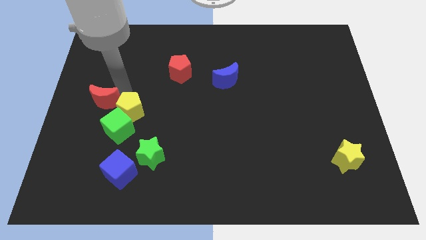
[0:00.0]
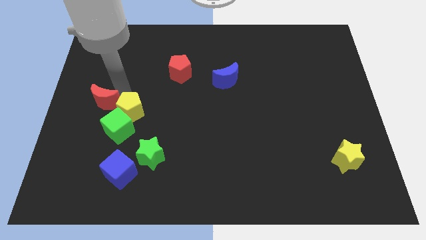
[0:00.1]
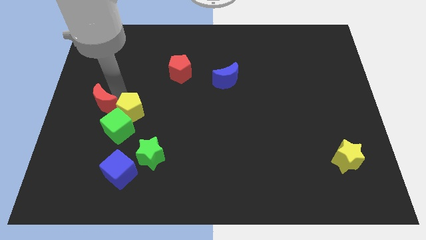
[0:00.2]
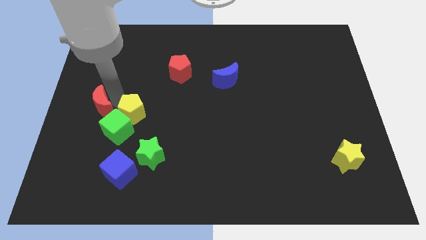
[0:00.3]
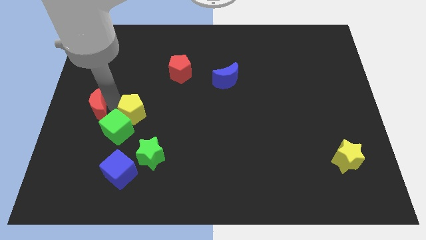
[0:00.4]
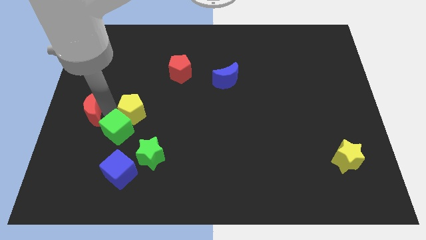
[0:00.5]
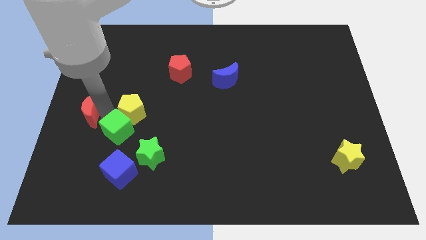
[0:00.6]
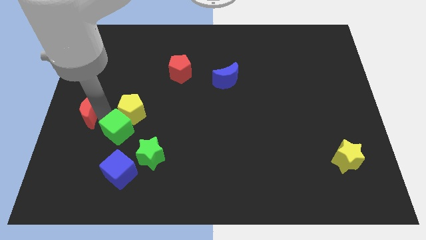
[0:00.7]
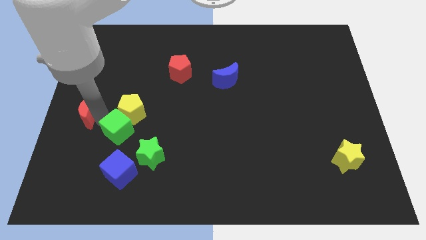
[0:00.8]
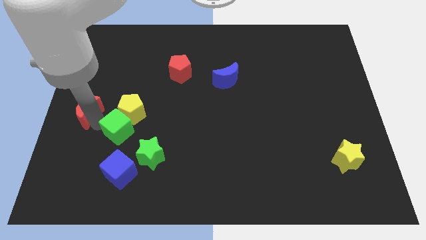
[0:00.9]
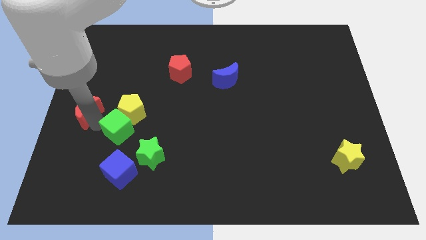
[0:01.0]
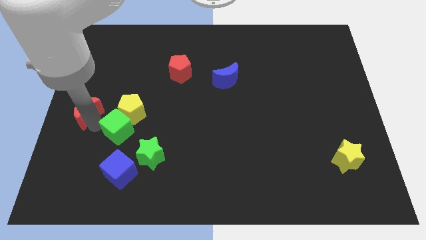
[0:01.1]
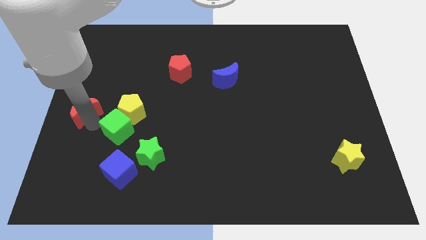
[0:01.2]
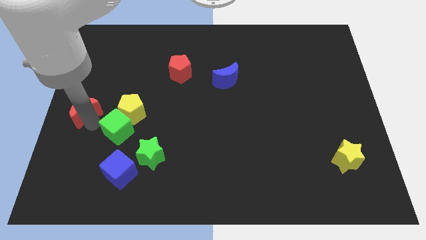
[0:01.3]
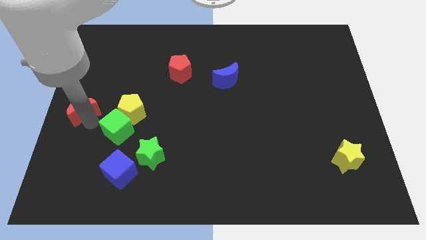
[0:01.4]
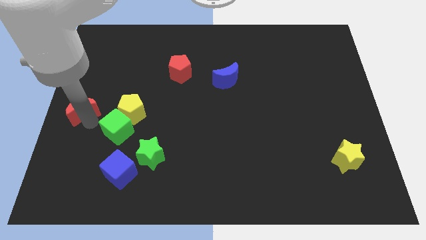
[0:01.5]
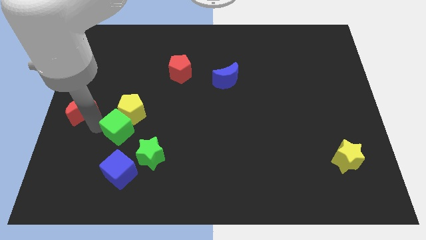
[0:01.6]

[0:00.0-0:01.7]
move the red crescent to the left center of the board

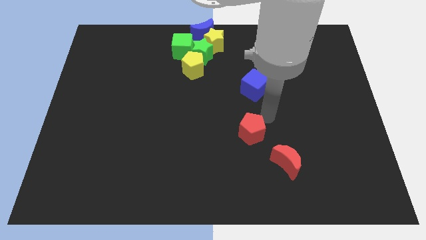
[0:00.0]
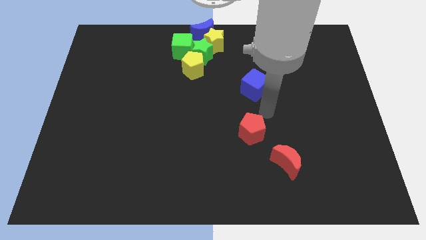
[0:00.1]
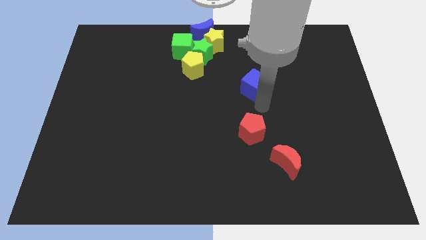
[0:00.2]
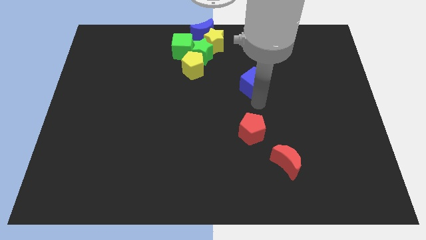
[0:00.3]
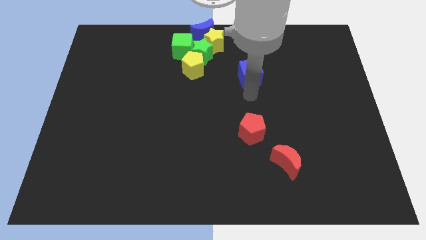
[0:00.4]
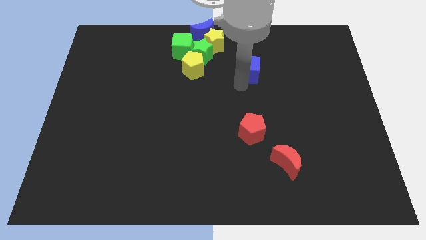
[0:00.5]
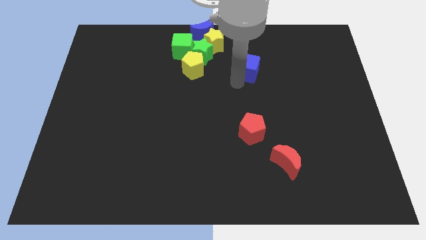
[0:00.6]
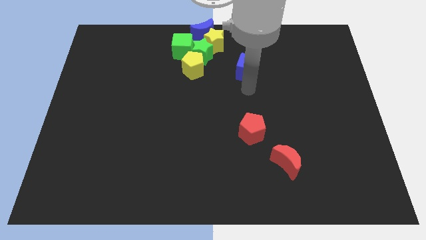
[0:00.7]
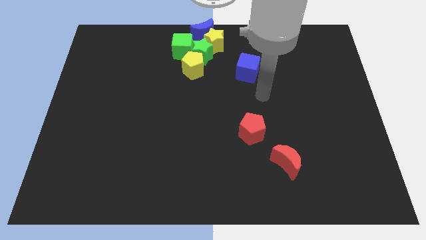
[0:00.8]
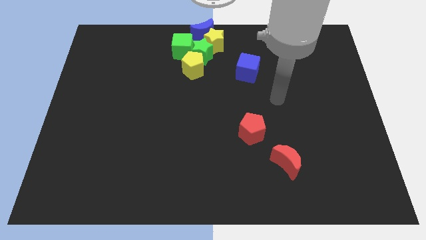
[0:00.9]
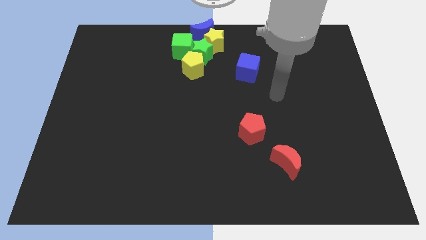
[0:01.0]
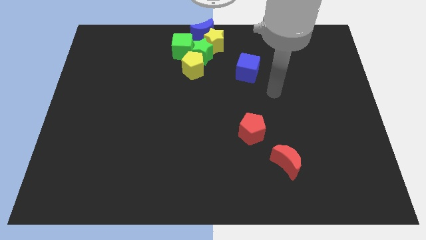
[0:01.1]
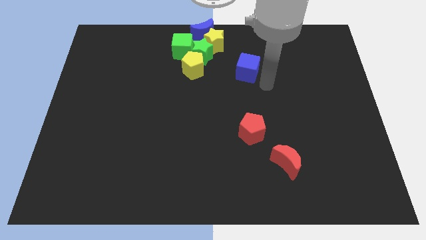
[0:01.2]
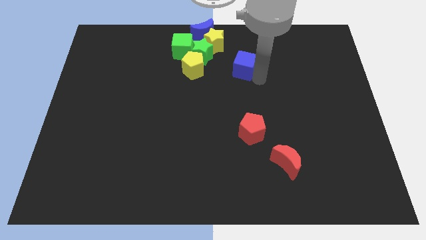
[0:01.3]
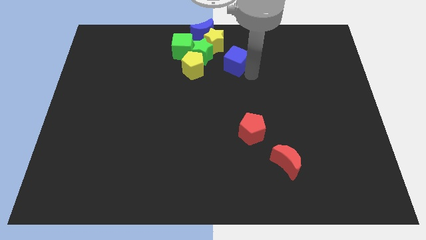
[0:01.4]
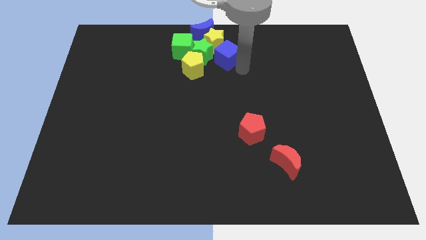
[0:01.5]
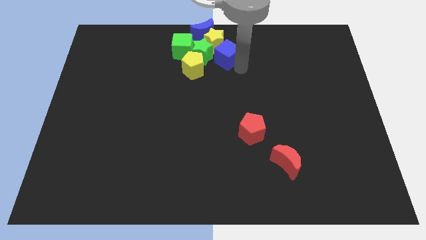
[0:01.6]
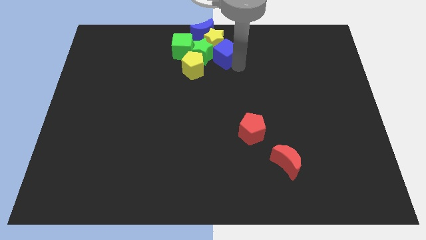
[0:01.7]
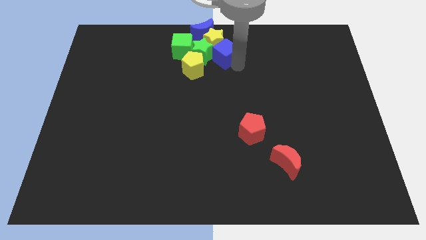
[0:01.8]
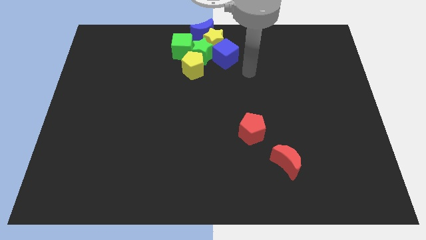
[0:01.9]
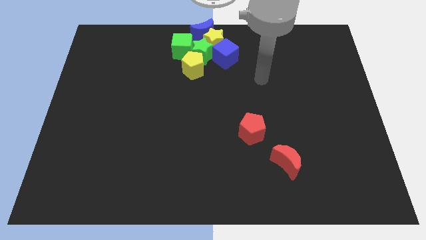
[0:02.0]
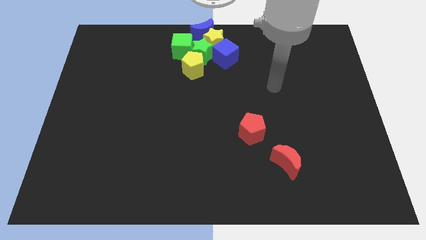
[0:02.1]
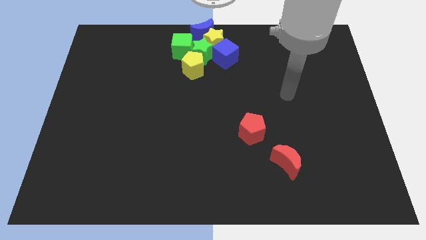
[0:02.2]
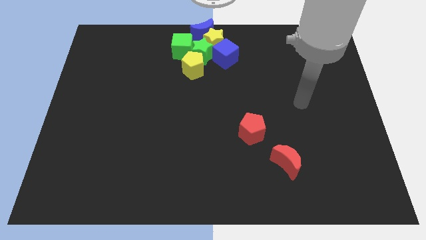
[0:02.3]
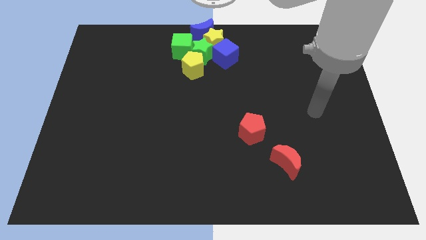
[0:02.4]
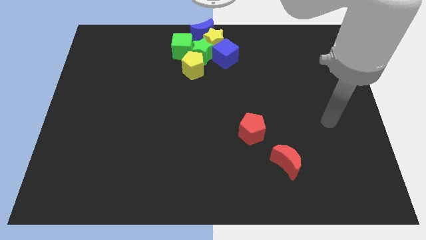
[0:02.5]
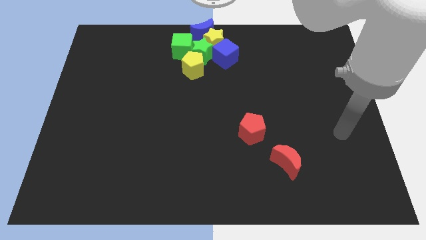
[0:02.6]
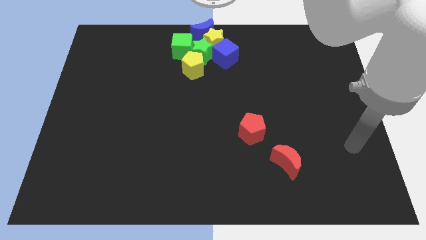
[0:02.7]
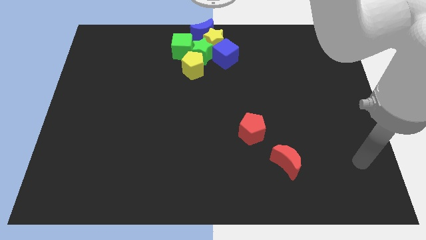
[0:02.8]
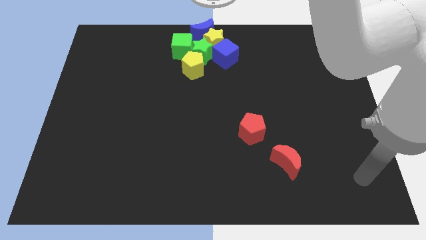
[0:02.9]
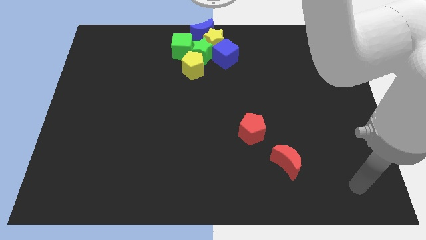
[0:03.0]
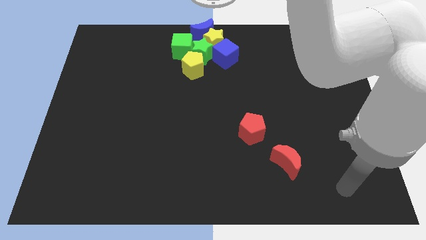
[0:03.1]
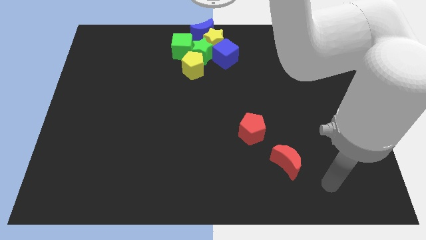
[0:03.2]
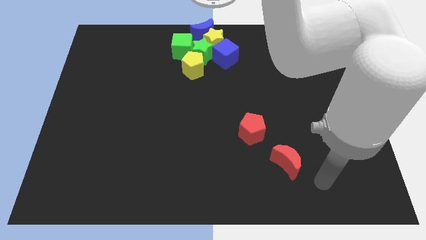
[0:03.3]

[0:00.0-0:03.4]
put the blue cube diagonally top left to the red pentagon

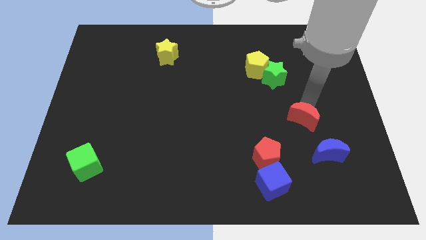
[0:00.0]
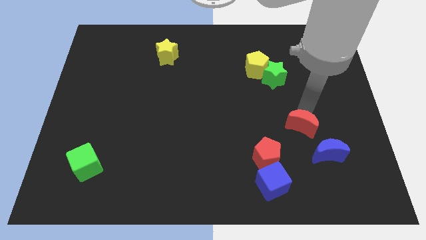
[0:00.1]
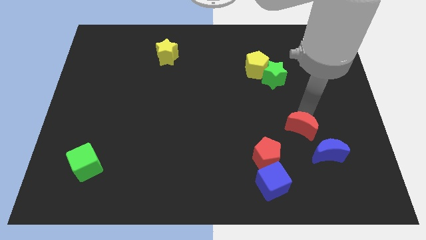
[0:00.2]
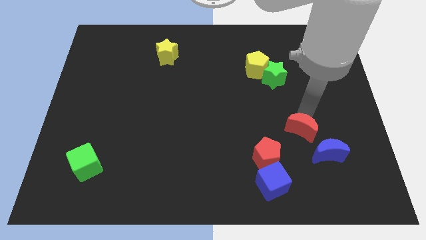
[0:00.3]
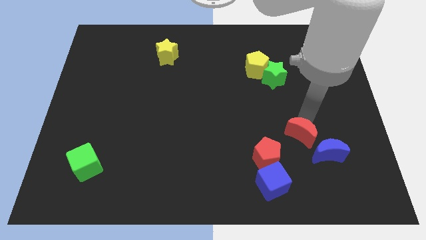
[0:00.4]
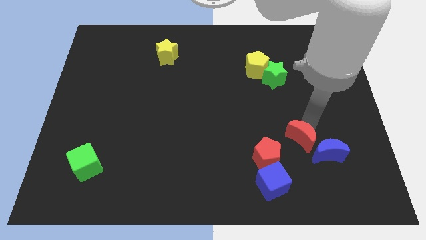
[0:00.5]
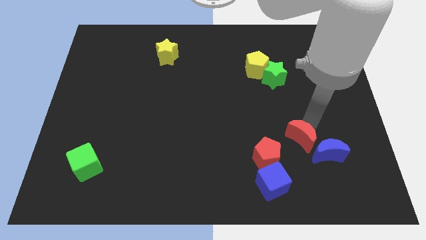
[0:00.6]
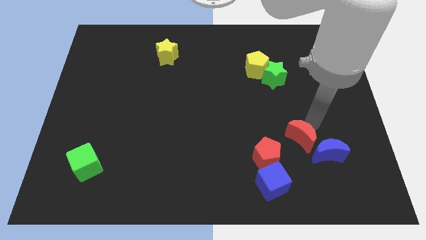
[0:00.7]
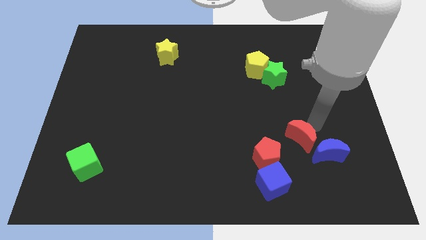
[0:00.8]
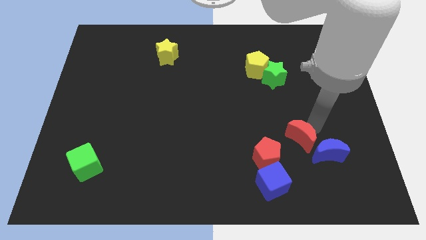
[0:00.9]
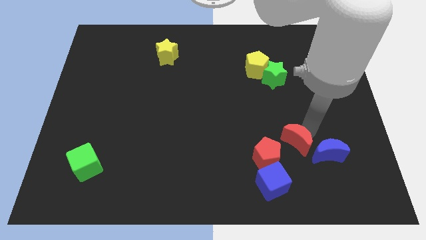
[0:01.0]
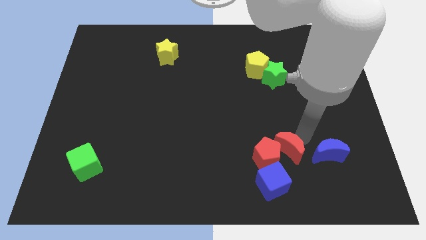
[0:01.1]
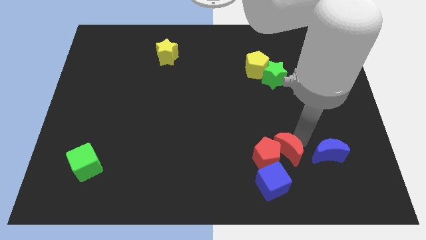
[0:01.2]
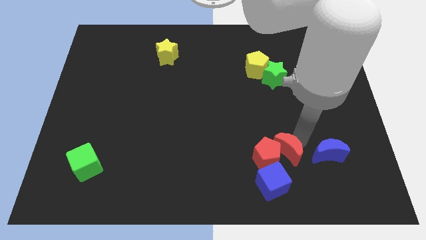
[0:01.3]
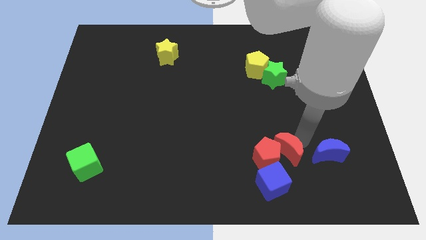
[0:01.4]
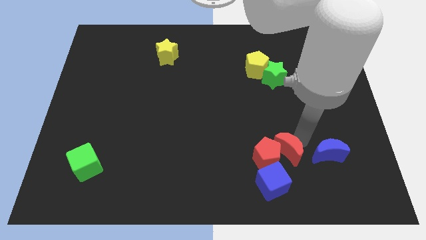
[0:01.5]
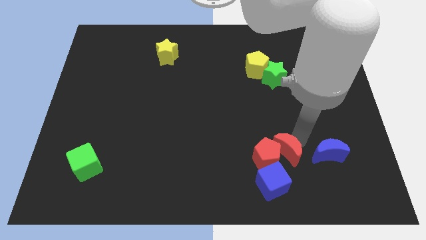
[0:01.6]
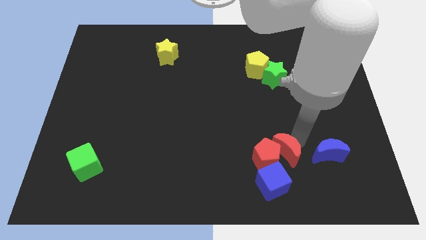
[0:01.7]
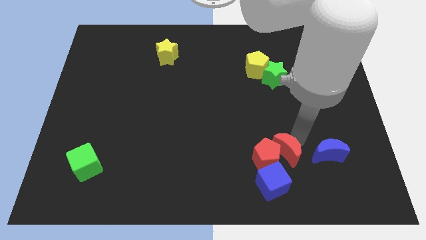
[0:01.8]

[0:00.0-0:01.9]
place the red moon into red pentagon to the right side

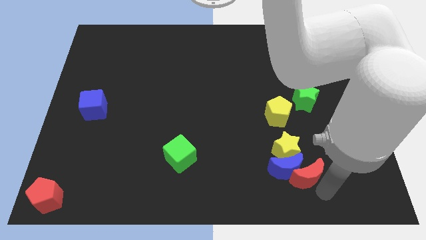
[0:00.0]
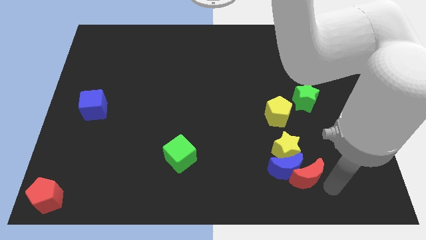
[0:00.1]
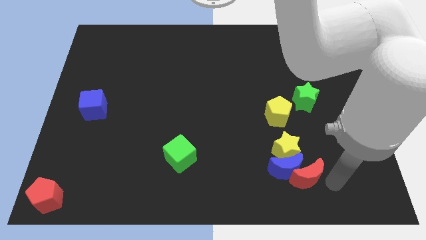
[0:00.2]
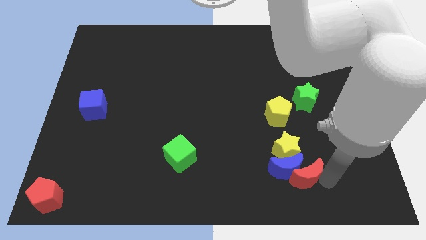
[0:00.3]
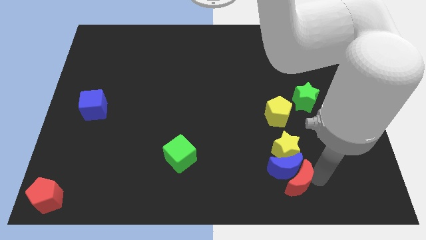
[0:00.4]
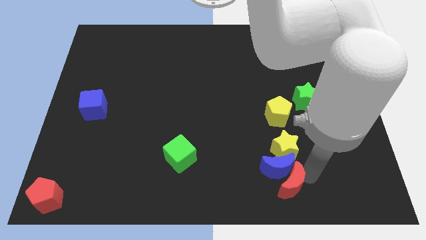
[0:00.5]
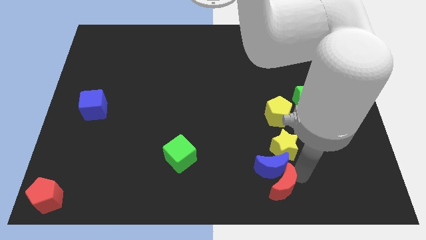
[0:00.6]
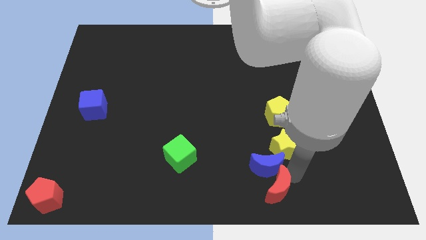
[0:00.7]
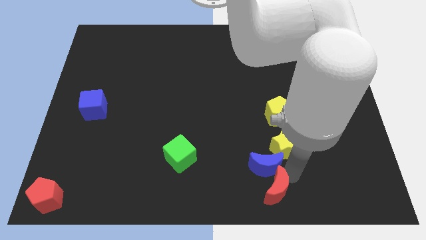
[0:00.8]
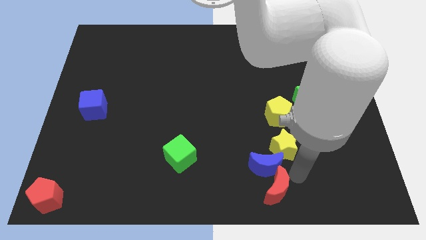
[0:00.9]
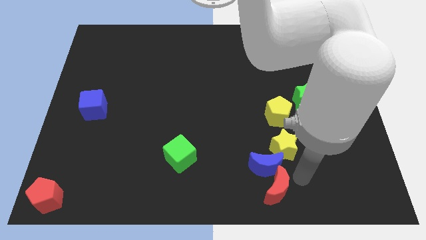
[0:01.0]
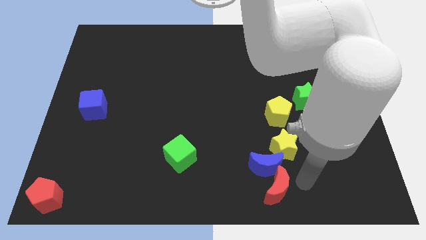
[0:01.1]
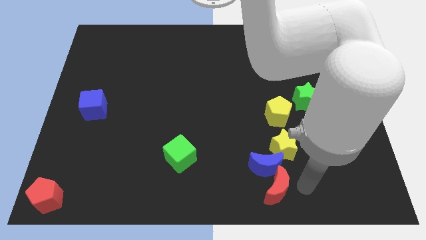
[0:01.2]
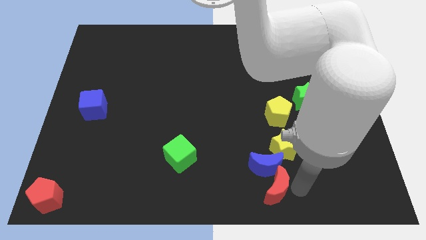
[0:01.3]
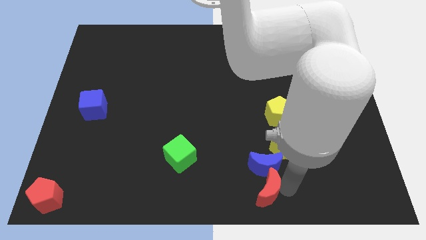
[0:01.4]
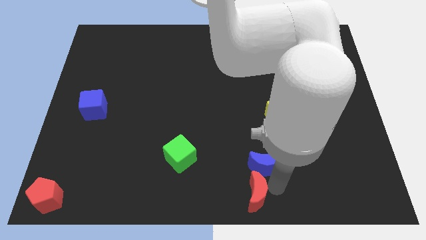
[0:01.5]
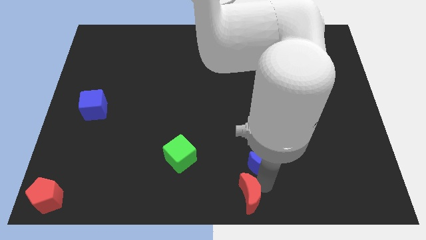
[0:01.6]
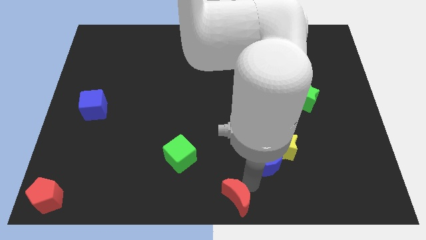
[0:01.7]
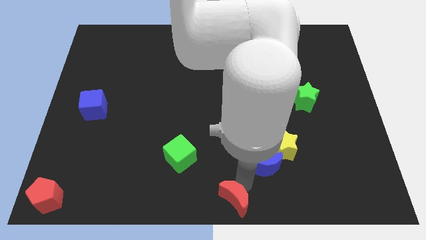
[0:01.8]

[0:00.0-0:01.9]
separate the red moon from the blue moon
